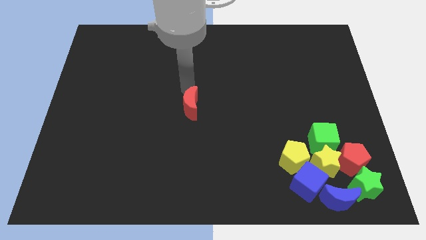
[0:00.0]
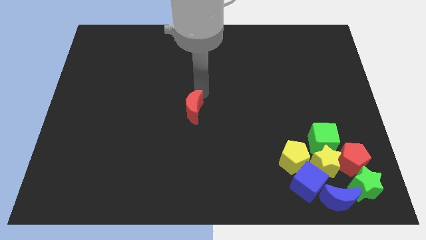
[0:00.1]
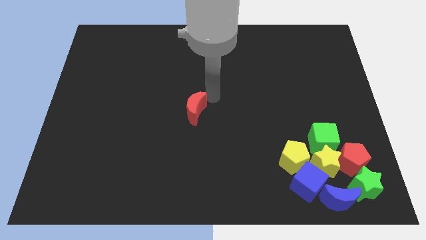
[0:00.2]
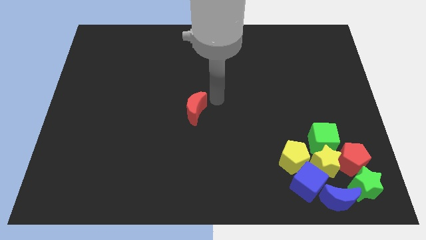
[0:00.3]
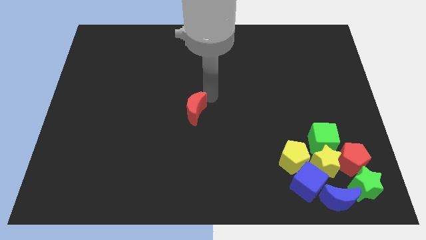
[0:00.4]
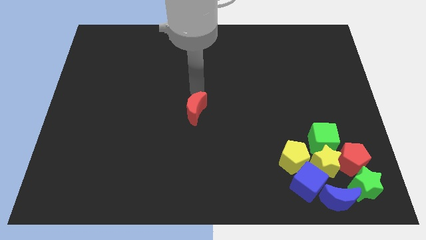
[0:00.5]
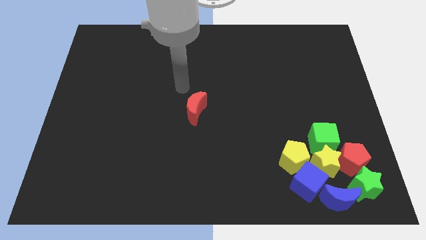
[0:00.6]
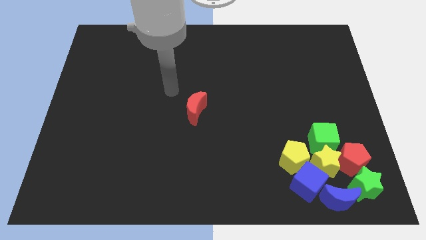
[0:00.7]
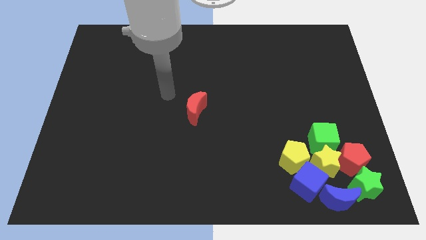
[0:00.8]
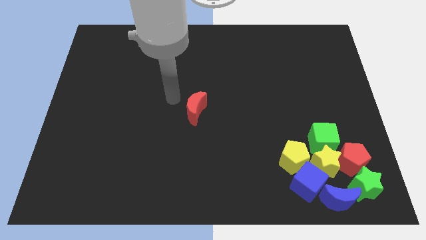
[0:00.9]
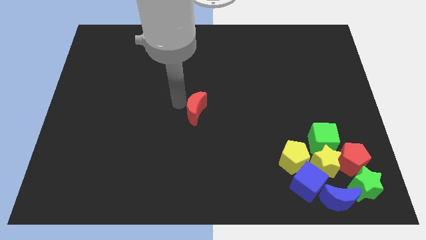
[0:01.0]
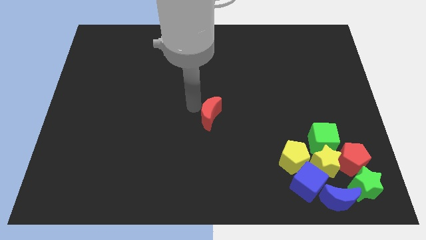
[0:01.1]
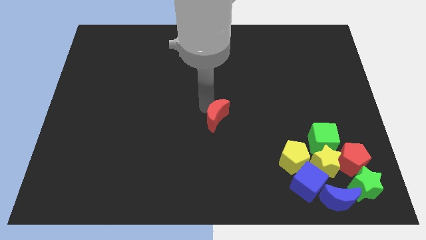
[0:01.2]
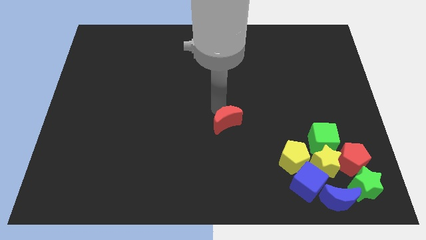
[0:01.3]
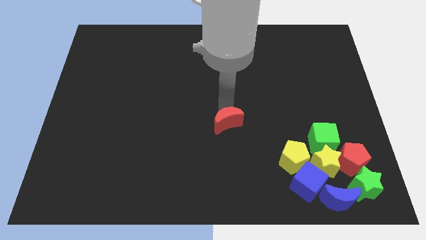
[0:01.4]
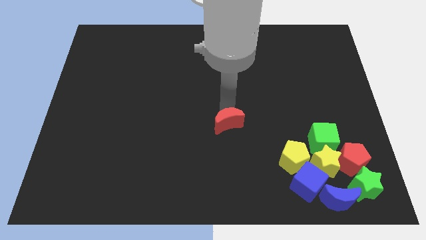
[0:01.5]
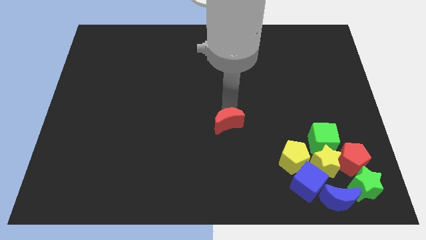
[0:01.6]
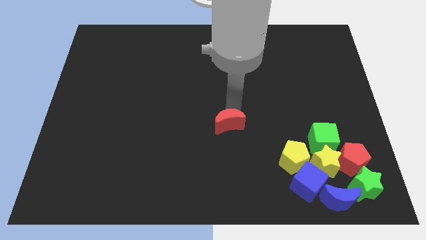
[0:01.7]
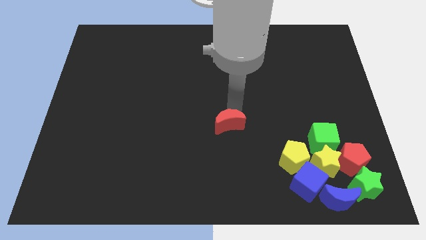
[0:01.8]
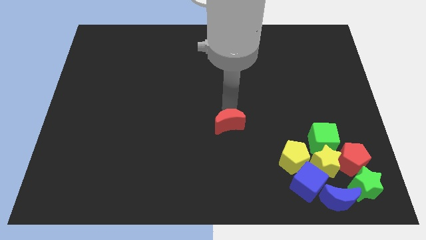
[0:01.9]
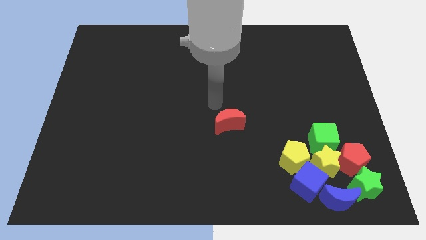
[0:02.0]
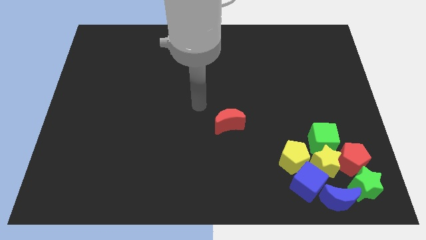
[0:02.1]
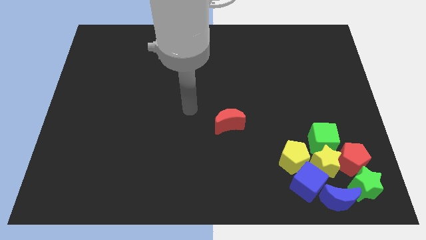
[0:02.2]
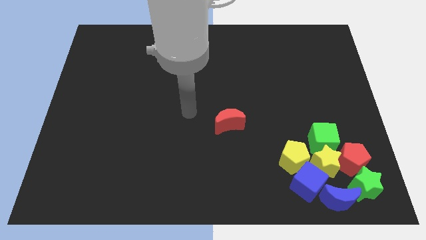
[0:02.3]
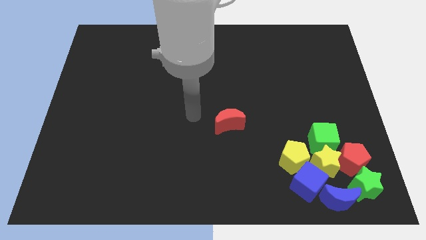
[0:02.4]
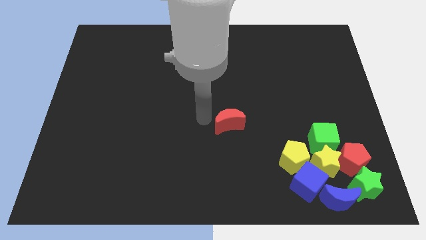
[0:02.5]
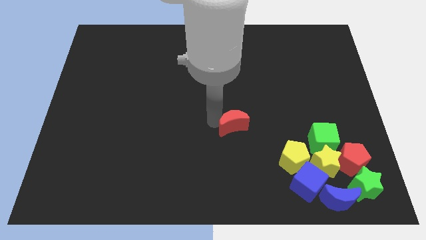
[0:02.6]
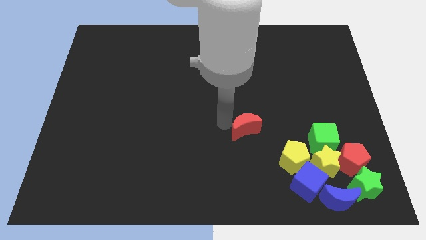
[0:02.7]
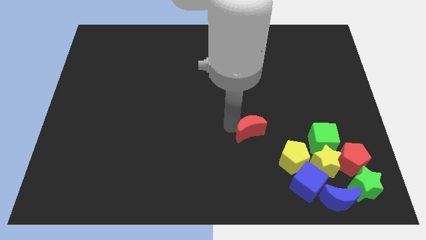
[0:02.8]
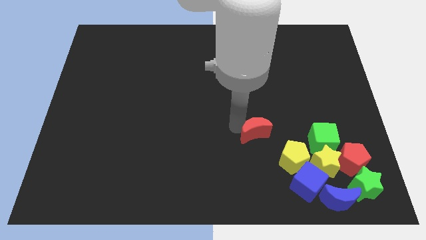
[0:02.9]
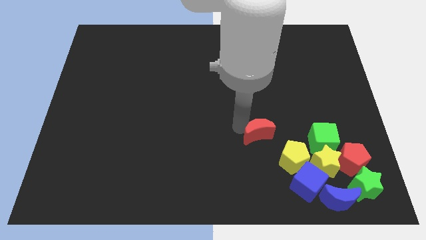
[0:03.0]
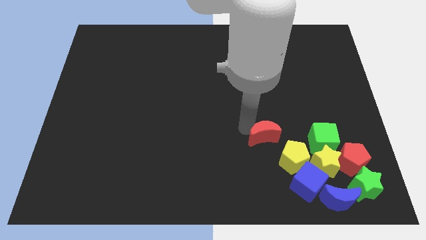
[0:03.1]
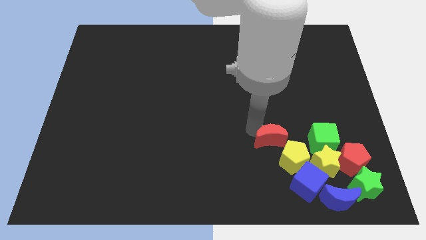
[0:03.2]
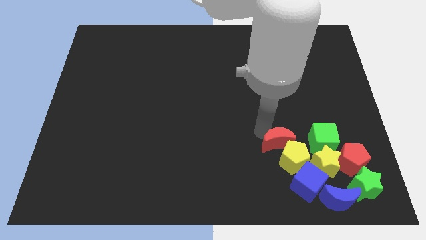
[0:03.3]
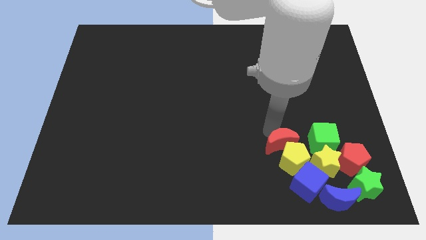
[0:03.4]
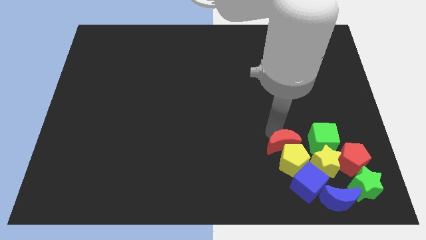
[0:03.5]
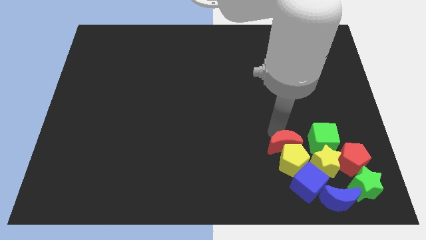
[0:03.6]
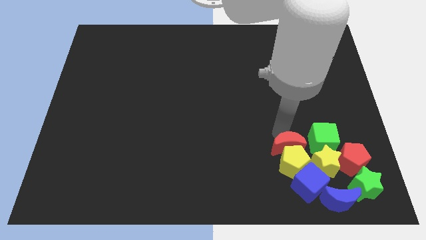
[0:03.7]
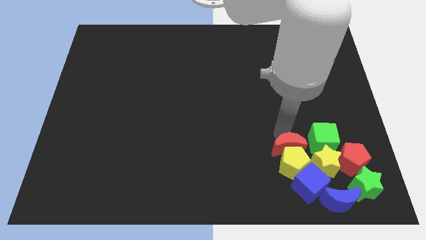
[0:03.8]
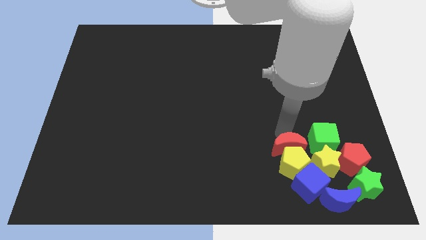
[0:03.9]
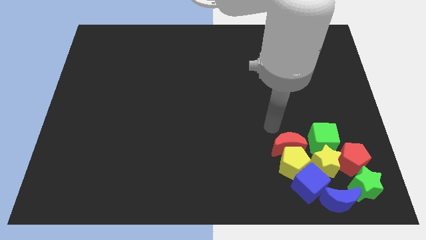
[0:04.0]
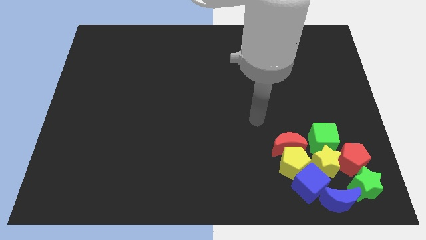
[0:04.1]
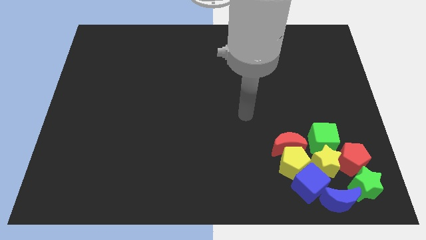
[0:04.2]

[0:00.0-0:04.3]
place the red crescent at the top of the yellow pentagon

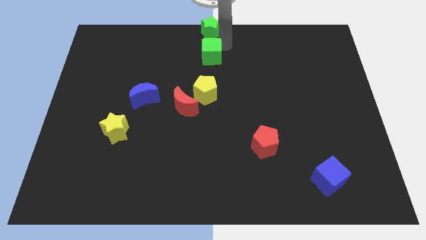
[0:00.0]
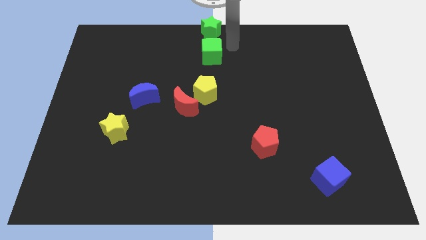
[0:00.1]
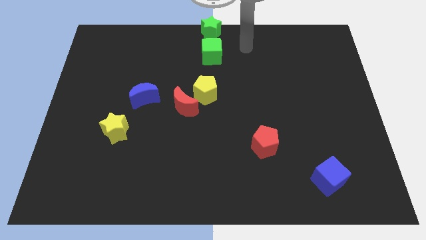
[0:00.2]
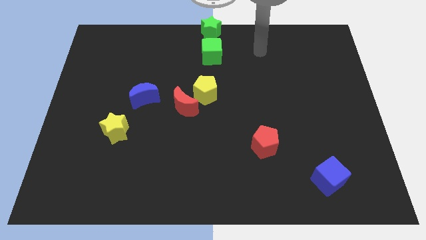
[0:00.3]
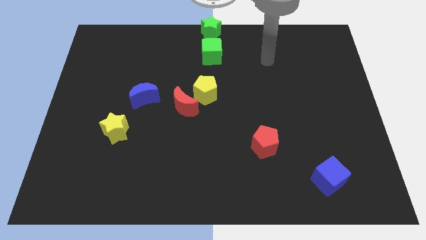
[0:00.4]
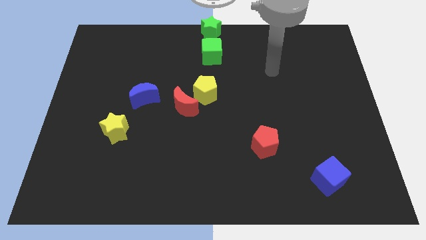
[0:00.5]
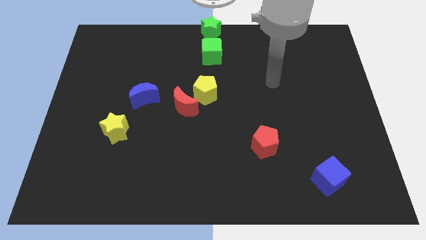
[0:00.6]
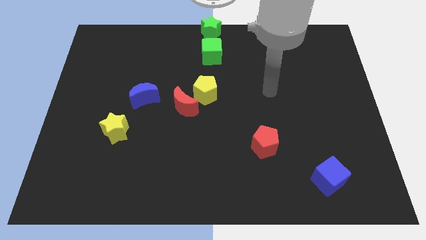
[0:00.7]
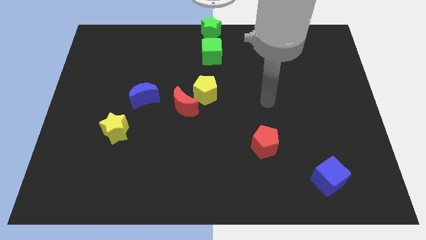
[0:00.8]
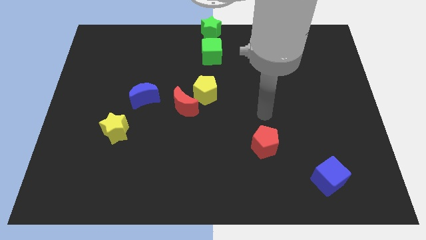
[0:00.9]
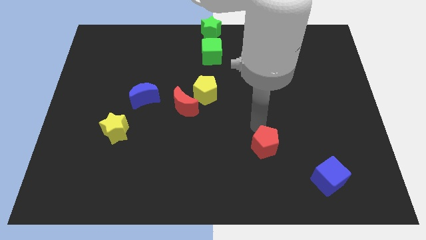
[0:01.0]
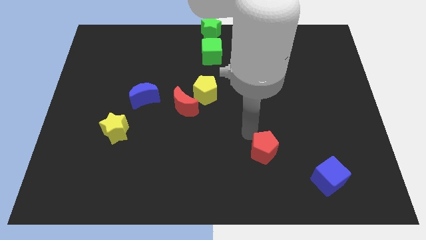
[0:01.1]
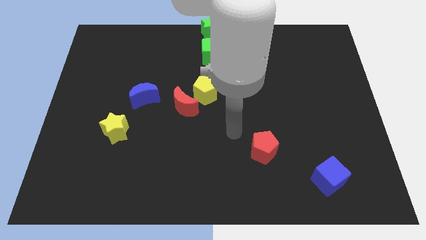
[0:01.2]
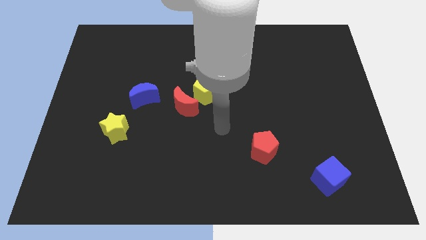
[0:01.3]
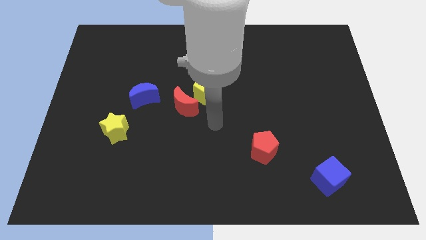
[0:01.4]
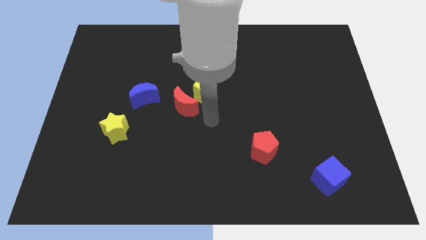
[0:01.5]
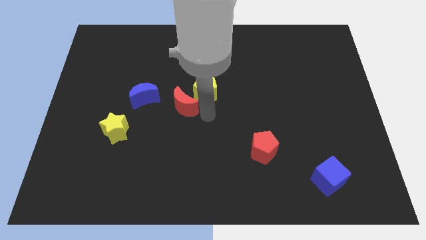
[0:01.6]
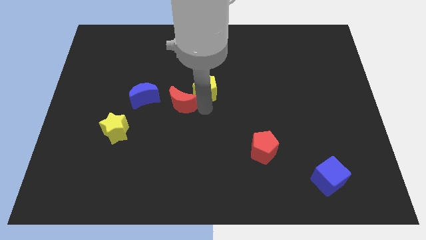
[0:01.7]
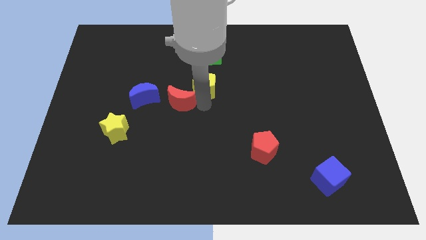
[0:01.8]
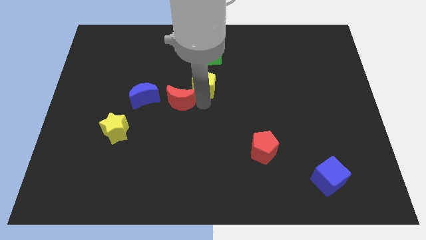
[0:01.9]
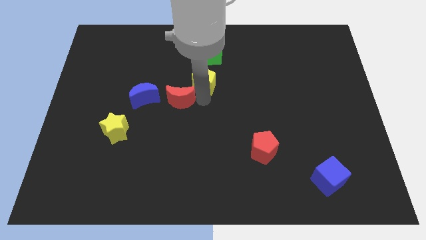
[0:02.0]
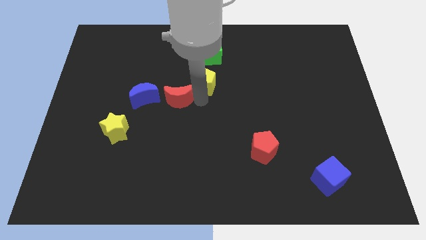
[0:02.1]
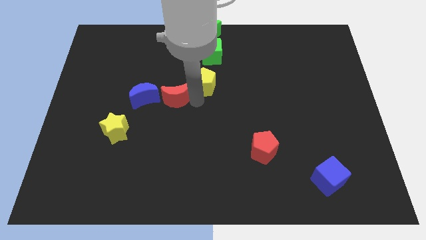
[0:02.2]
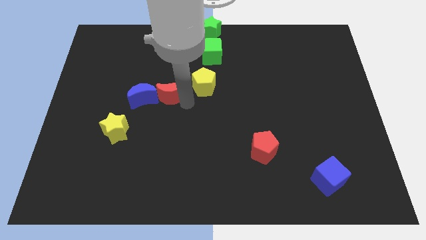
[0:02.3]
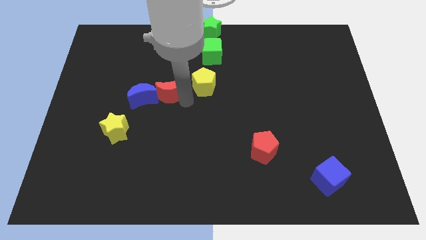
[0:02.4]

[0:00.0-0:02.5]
push the red pentagon and separate the yellow pentagon and red moon

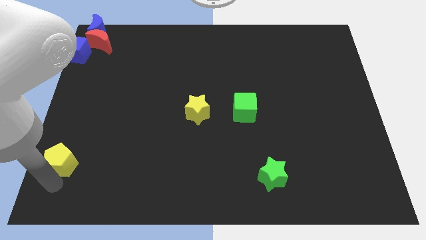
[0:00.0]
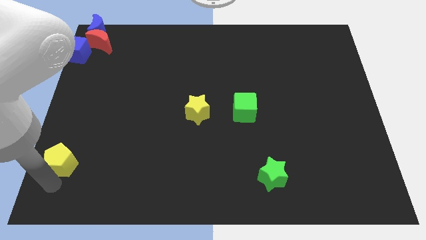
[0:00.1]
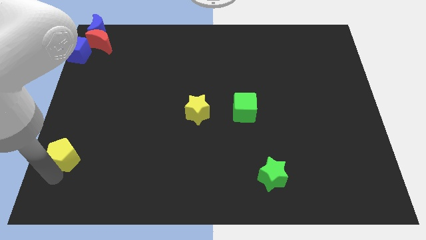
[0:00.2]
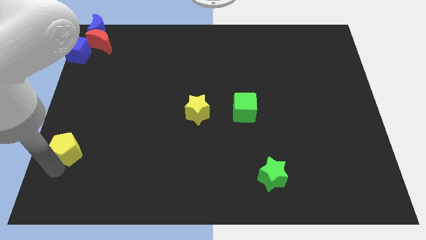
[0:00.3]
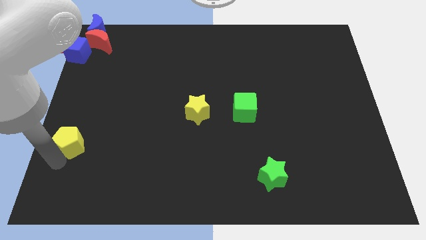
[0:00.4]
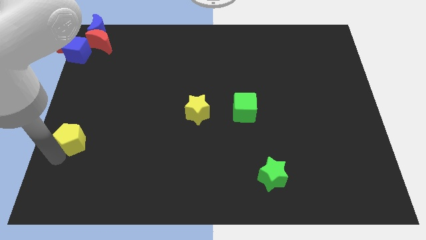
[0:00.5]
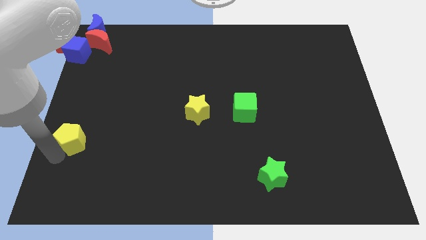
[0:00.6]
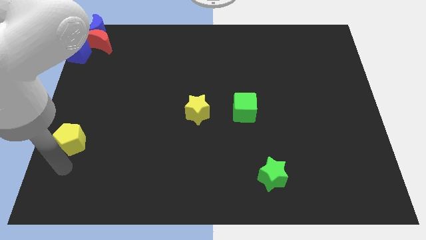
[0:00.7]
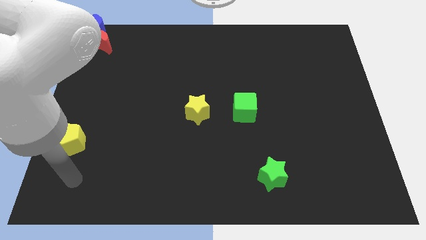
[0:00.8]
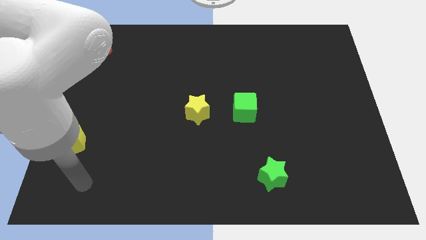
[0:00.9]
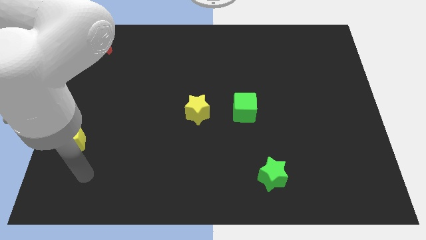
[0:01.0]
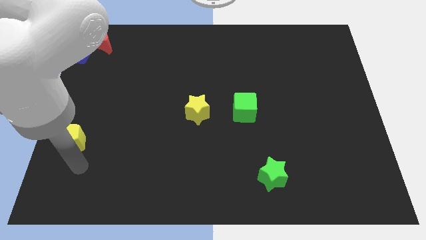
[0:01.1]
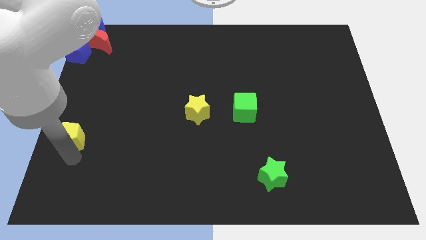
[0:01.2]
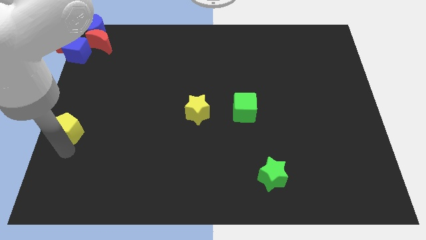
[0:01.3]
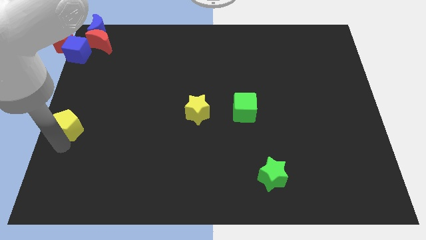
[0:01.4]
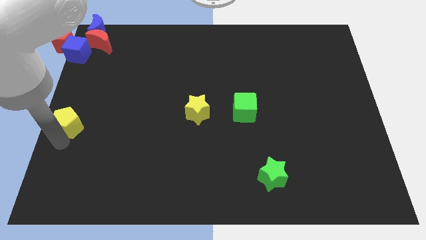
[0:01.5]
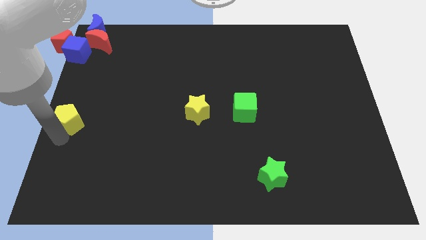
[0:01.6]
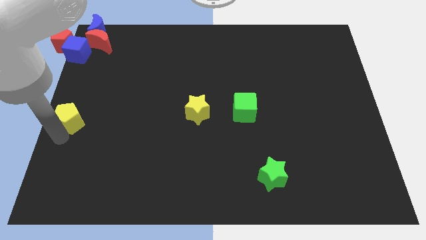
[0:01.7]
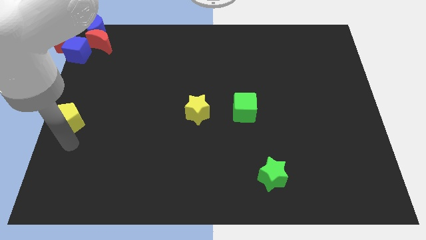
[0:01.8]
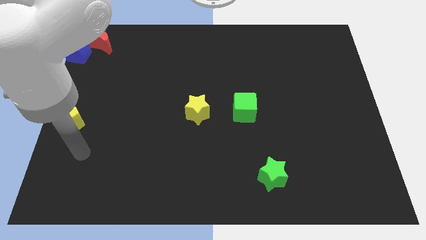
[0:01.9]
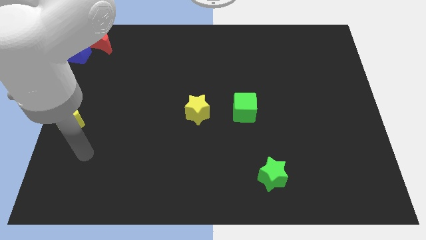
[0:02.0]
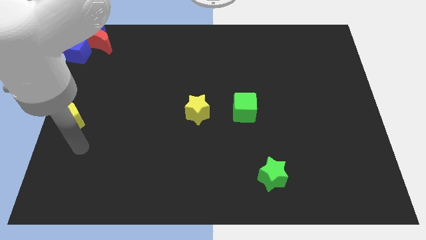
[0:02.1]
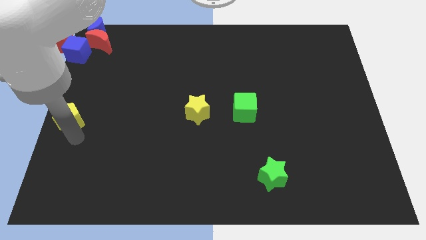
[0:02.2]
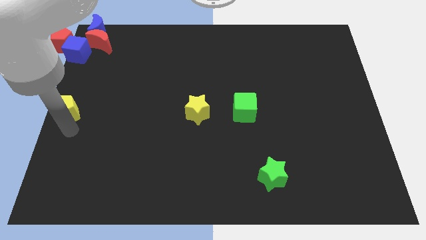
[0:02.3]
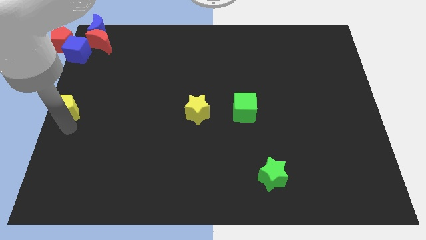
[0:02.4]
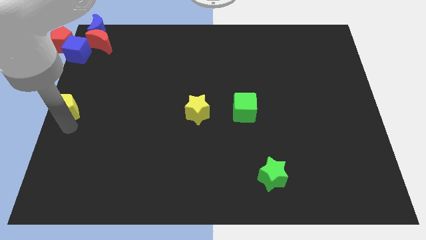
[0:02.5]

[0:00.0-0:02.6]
move yellow pentagon slightly towards up
